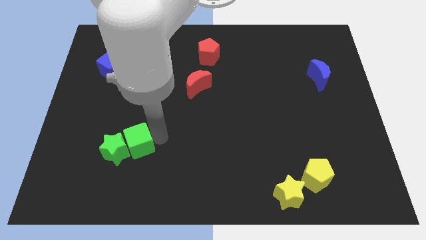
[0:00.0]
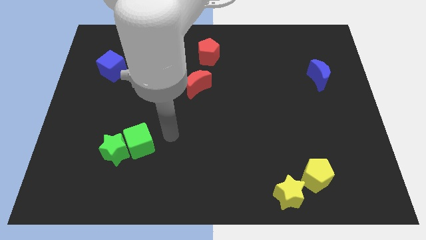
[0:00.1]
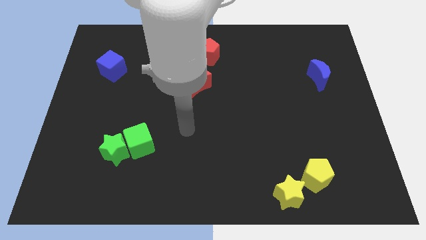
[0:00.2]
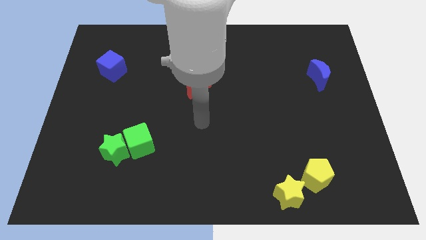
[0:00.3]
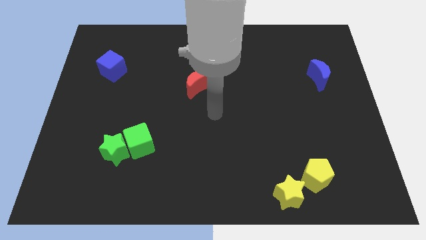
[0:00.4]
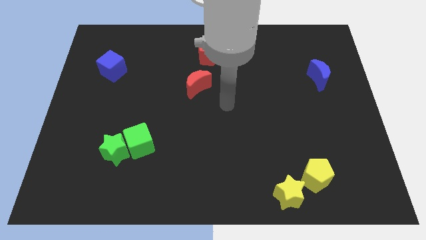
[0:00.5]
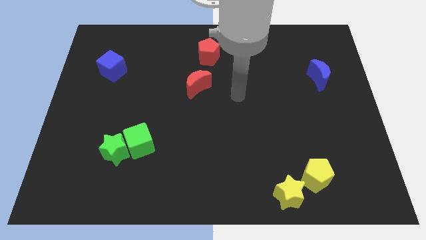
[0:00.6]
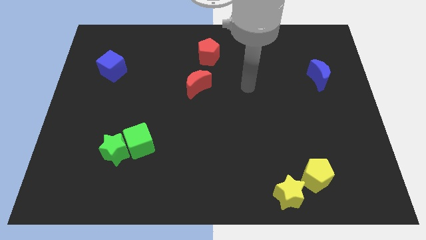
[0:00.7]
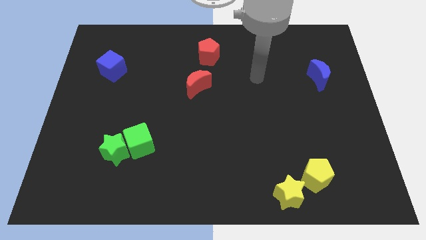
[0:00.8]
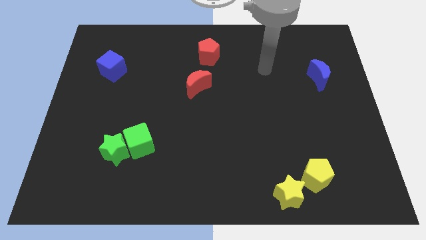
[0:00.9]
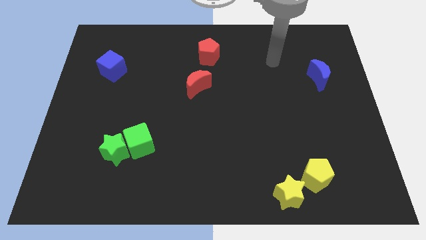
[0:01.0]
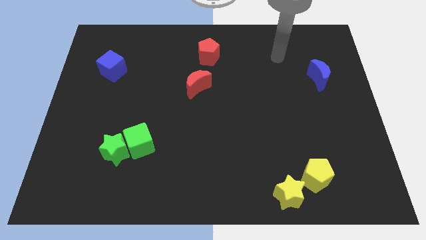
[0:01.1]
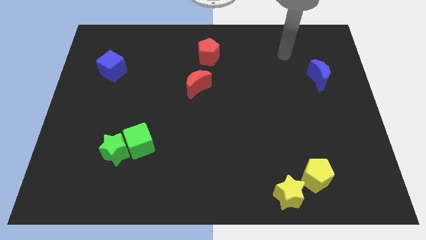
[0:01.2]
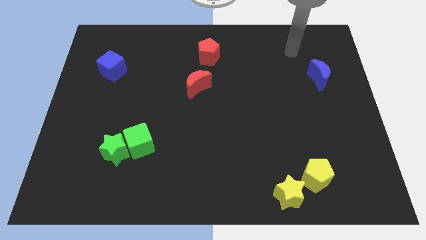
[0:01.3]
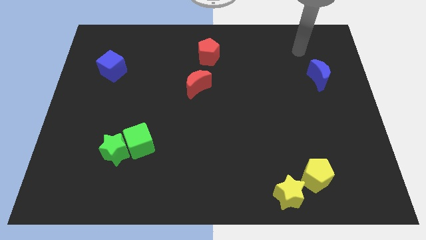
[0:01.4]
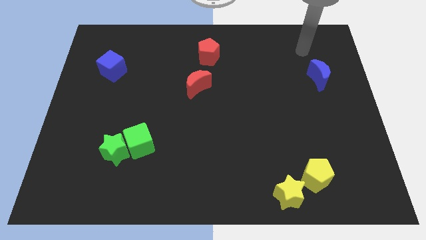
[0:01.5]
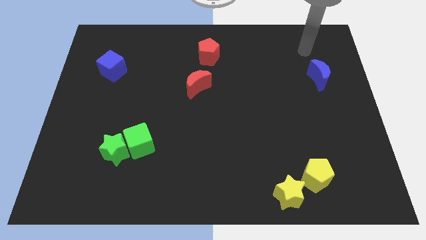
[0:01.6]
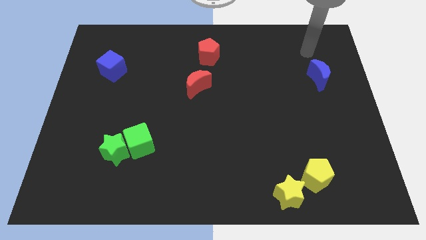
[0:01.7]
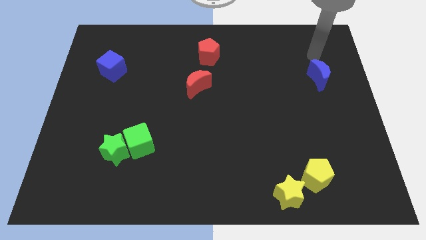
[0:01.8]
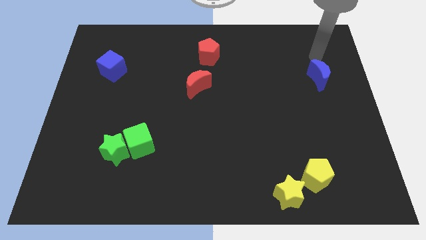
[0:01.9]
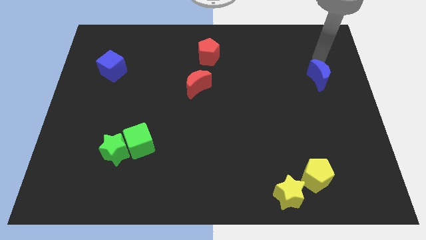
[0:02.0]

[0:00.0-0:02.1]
move away from green cube

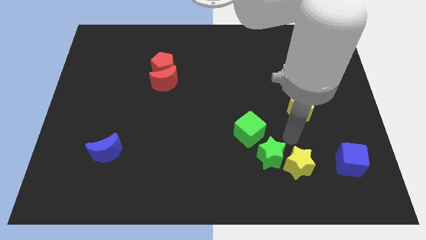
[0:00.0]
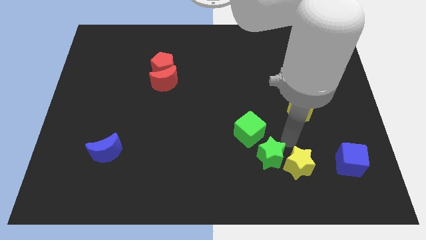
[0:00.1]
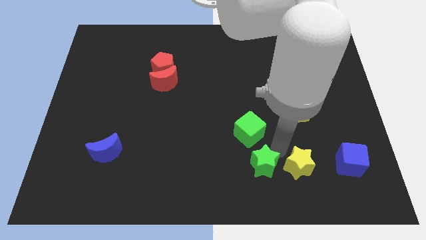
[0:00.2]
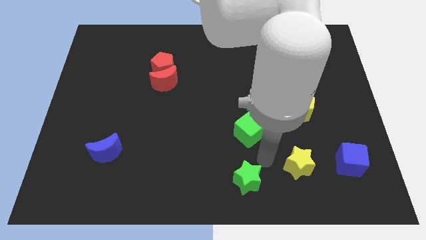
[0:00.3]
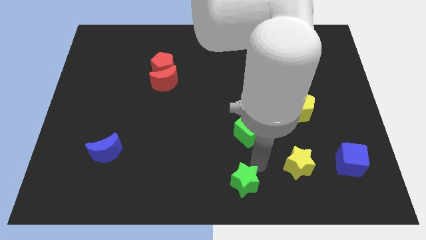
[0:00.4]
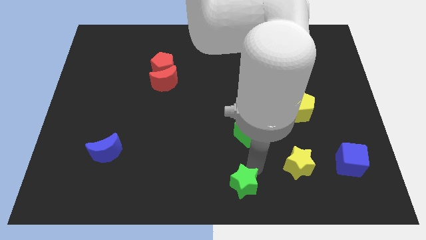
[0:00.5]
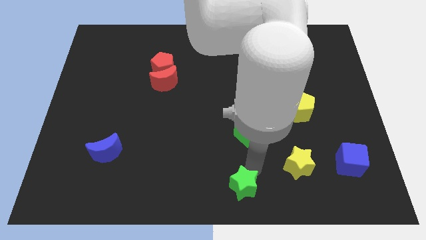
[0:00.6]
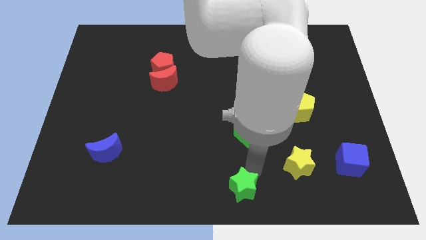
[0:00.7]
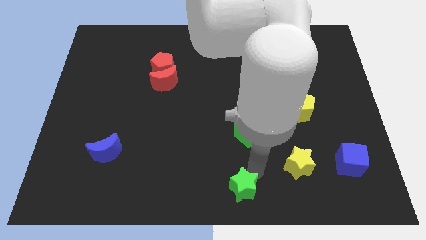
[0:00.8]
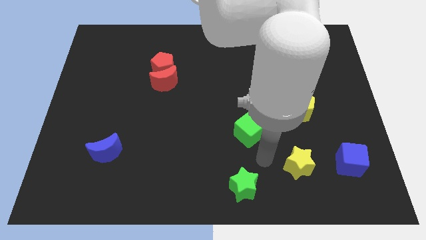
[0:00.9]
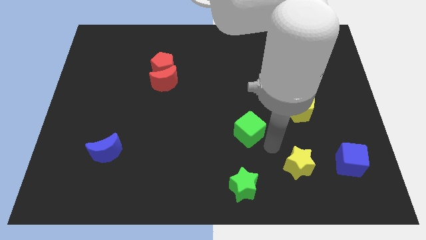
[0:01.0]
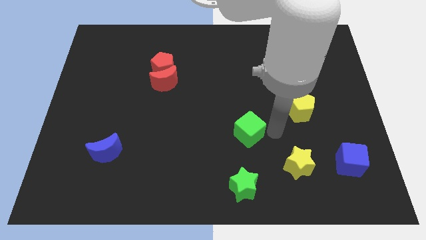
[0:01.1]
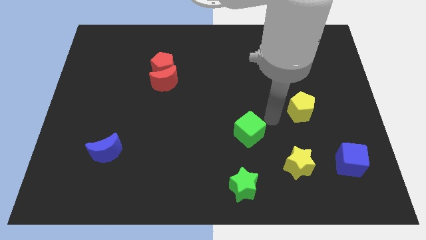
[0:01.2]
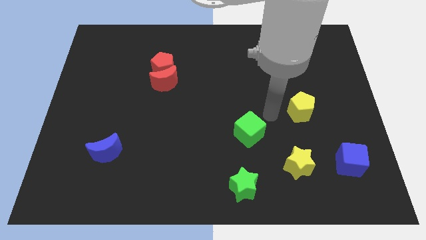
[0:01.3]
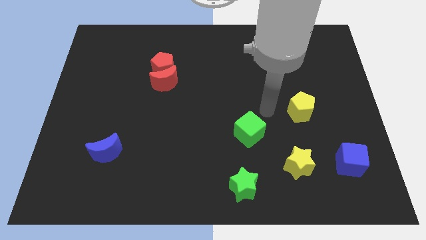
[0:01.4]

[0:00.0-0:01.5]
push the green star to the bottom of the green cube

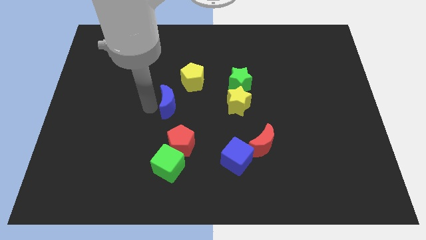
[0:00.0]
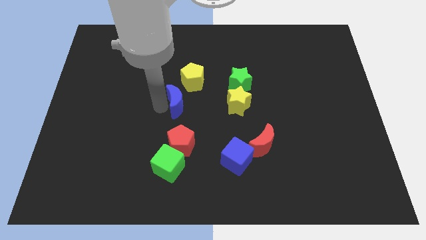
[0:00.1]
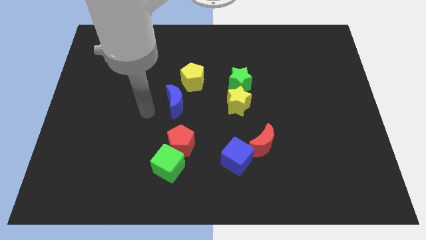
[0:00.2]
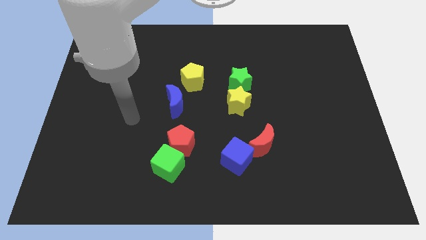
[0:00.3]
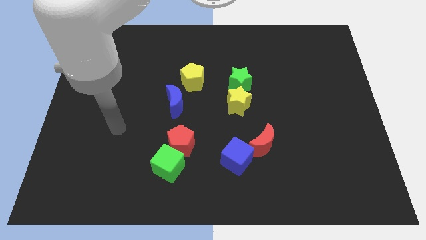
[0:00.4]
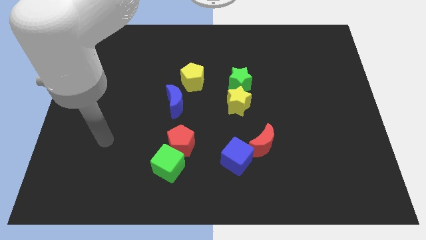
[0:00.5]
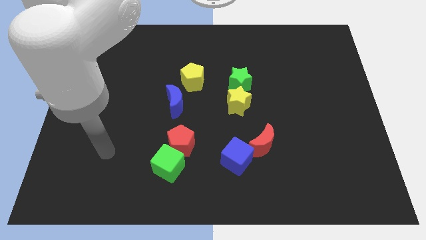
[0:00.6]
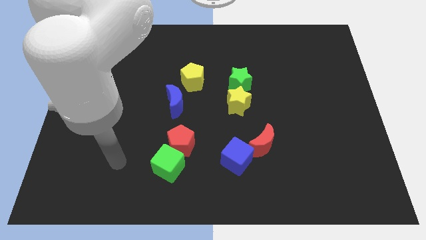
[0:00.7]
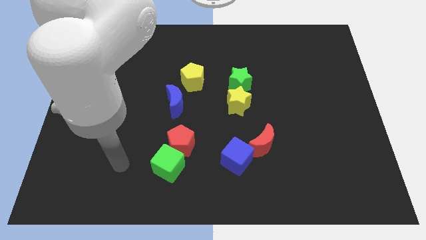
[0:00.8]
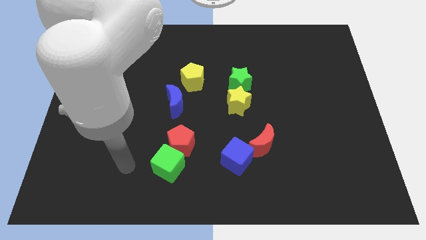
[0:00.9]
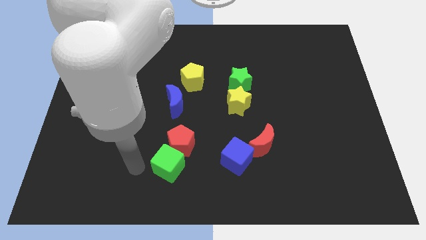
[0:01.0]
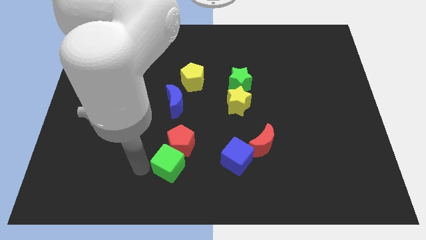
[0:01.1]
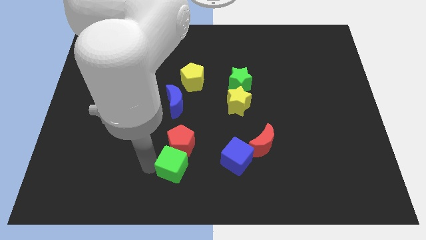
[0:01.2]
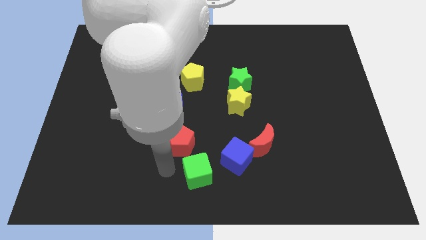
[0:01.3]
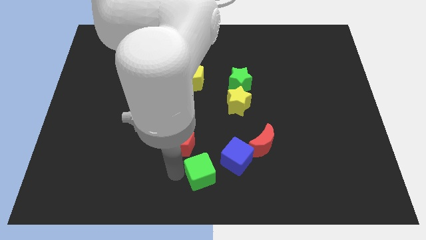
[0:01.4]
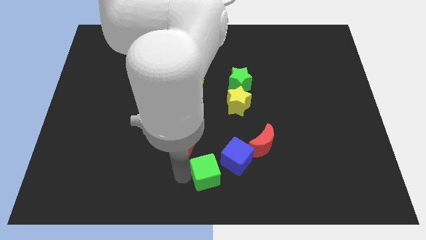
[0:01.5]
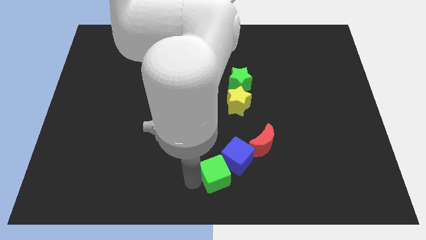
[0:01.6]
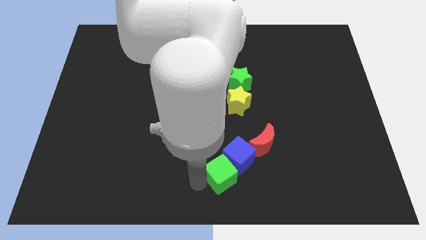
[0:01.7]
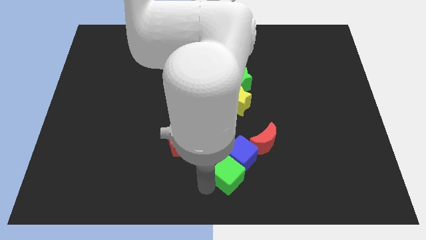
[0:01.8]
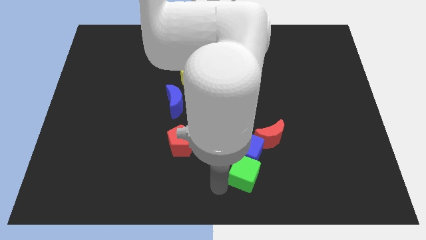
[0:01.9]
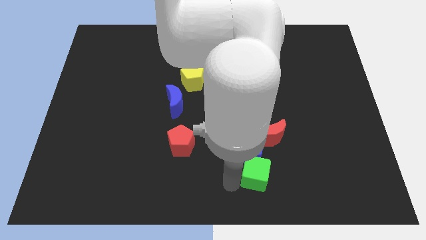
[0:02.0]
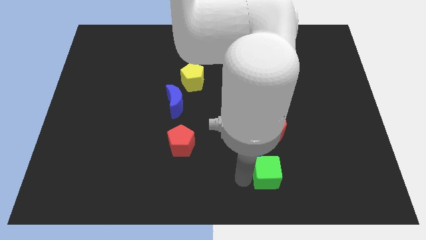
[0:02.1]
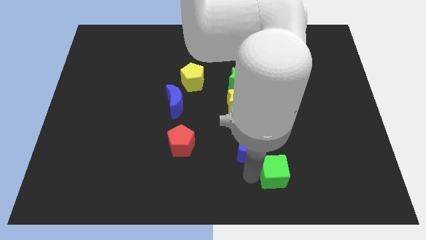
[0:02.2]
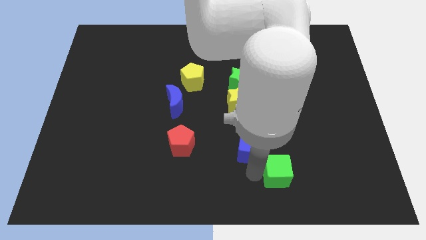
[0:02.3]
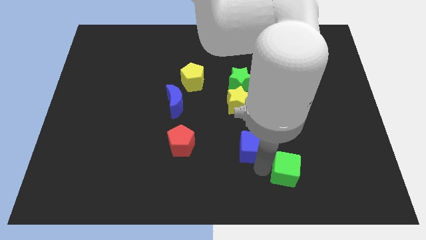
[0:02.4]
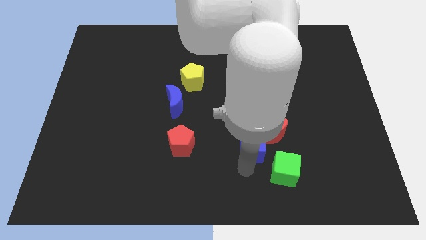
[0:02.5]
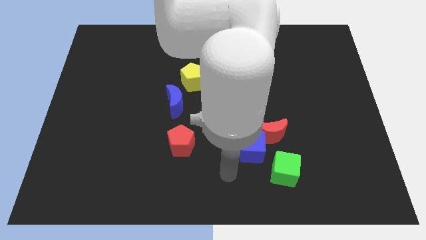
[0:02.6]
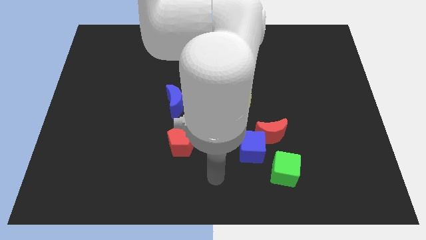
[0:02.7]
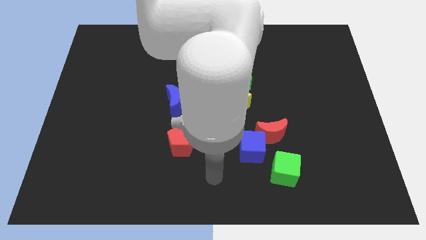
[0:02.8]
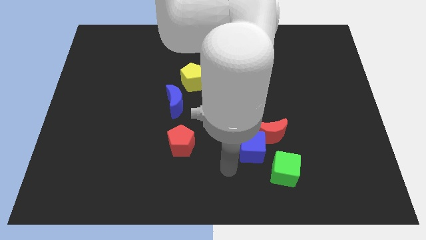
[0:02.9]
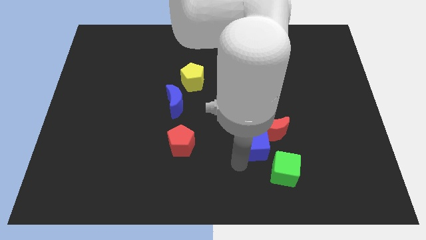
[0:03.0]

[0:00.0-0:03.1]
place the green cube diagonally below the bottom right side of the blue cube

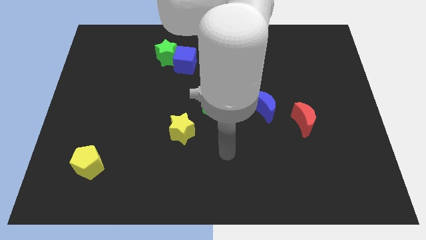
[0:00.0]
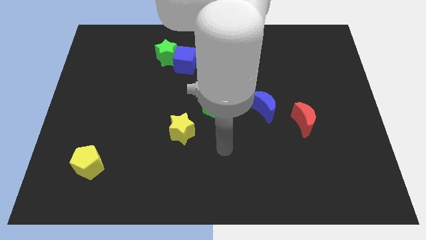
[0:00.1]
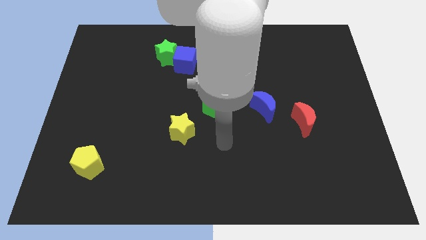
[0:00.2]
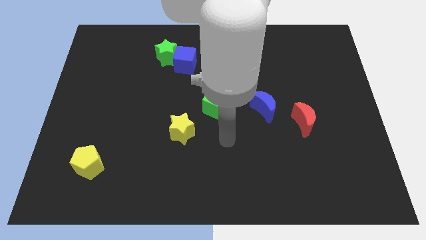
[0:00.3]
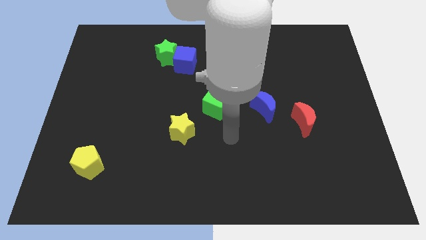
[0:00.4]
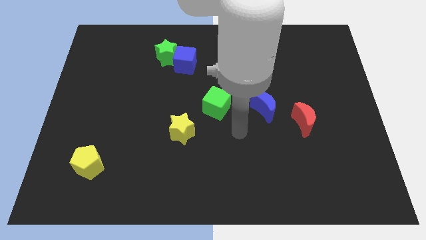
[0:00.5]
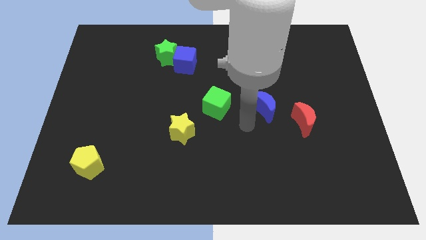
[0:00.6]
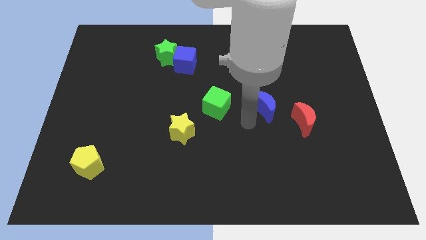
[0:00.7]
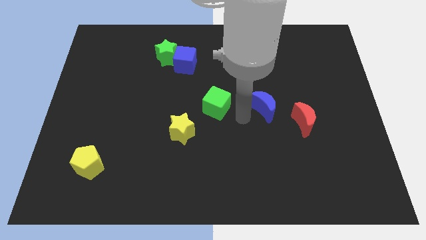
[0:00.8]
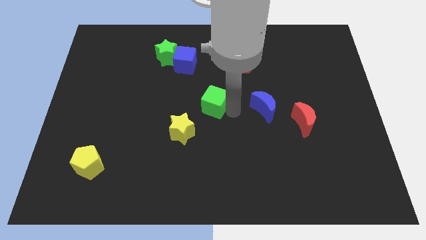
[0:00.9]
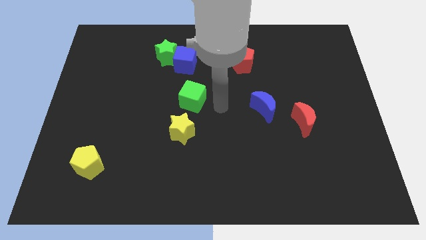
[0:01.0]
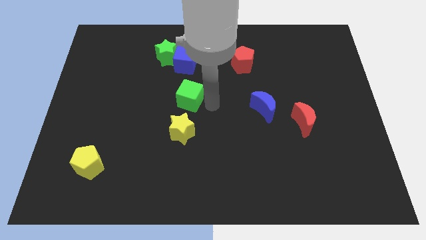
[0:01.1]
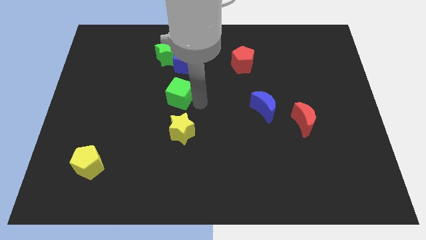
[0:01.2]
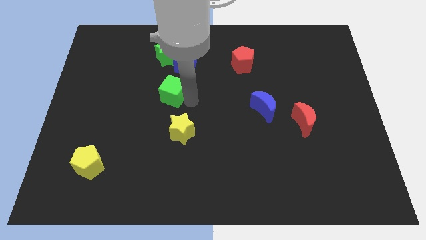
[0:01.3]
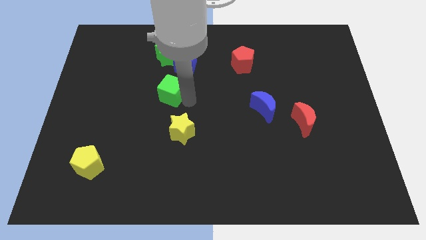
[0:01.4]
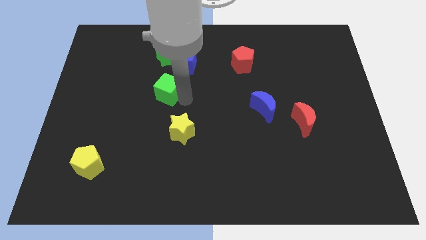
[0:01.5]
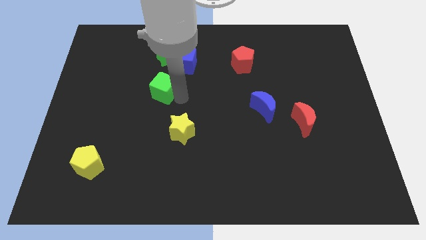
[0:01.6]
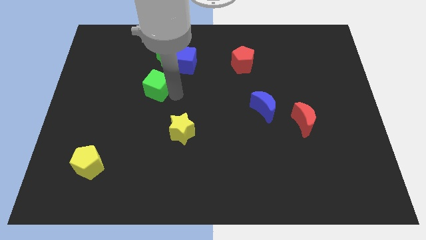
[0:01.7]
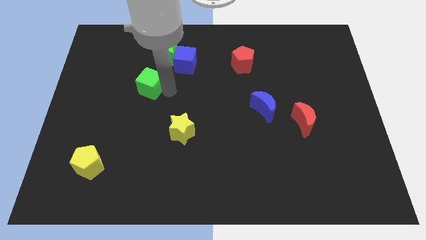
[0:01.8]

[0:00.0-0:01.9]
move the green cube digaonal to the green star

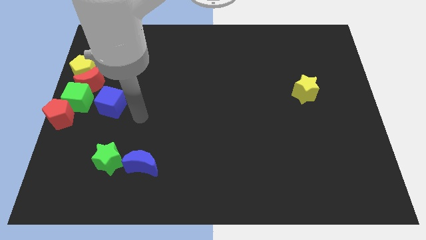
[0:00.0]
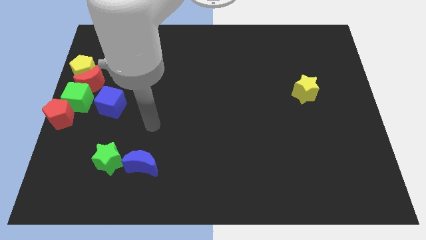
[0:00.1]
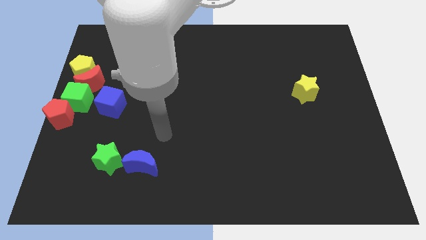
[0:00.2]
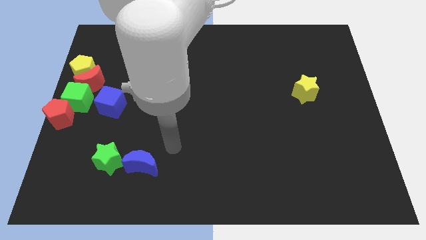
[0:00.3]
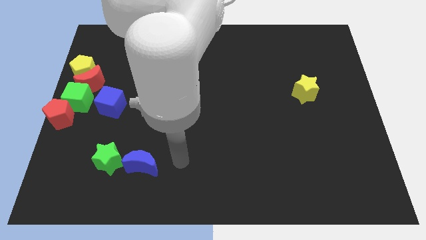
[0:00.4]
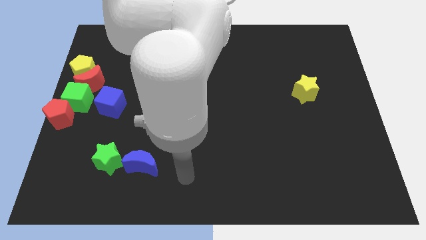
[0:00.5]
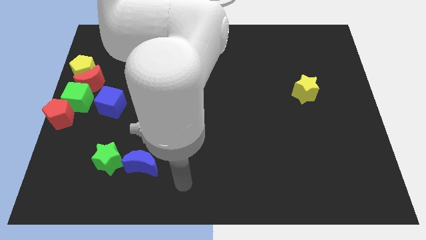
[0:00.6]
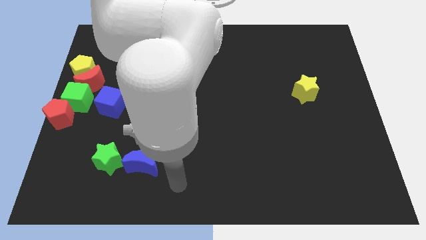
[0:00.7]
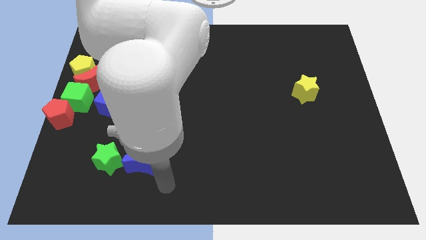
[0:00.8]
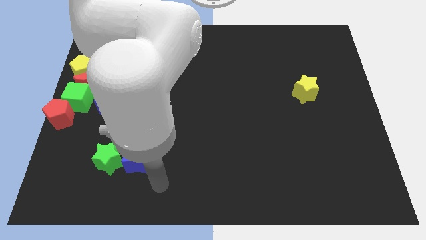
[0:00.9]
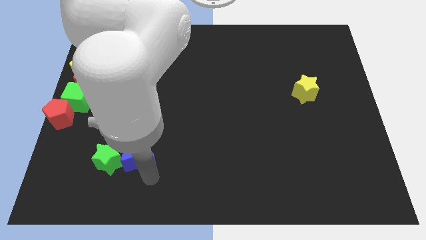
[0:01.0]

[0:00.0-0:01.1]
tap the blue crescent
